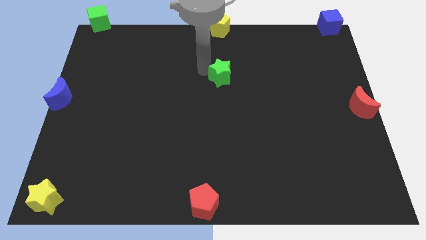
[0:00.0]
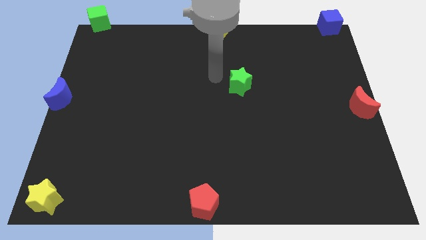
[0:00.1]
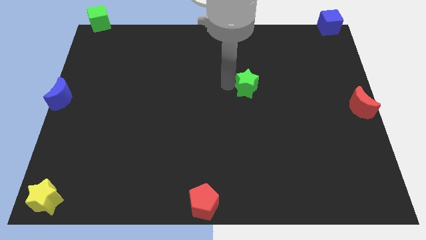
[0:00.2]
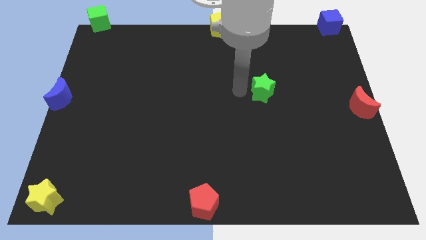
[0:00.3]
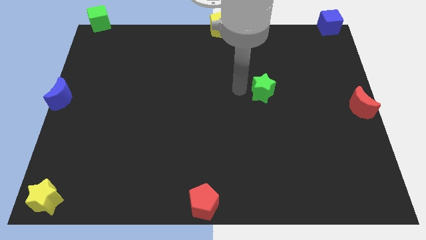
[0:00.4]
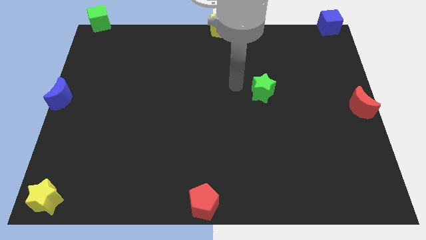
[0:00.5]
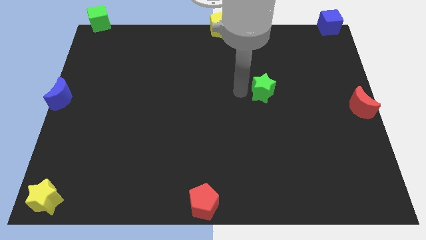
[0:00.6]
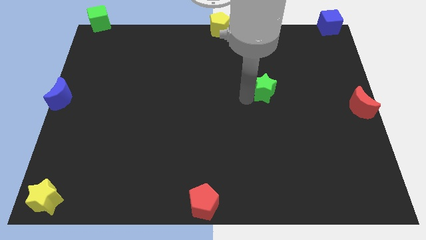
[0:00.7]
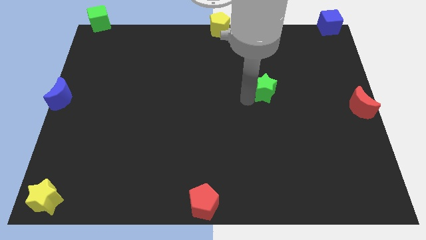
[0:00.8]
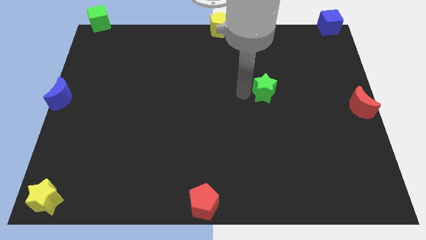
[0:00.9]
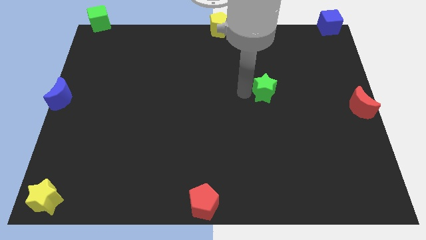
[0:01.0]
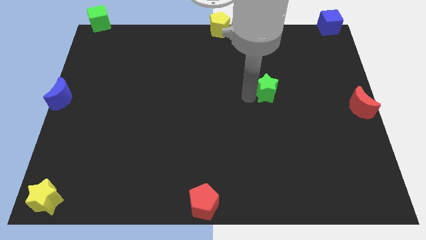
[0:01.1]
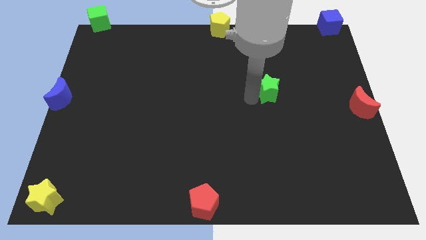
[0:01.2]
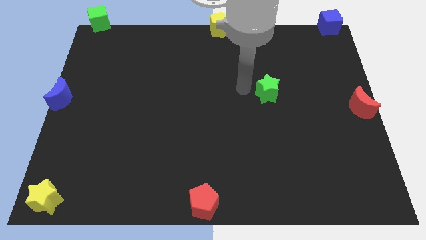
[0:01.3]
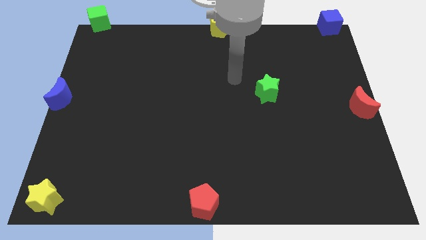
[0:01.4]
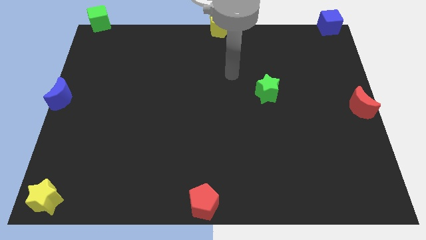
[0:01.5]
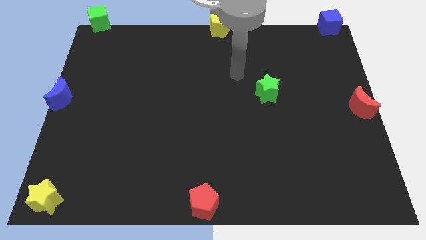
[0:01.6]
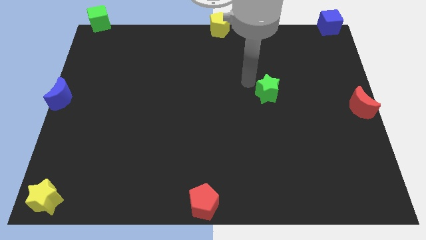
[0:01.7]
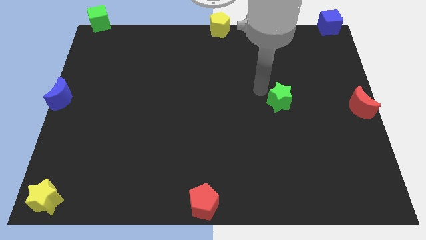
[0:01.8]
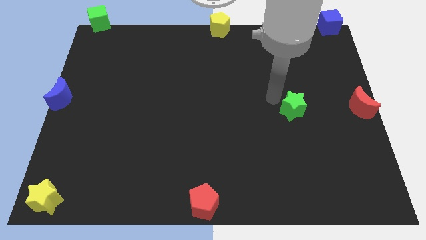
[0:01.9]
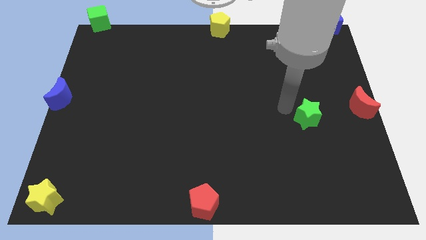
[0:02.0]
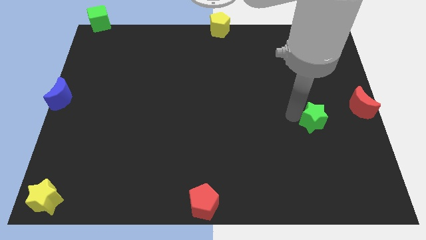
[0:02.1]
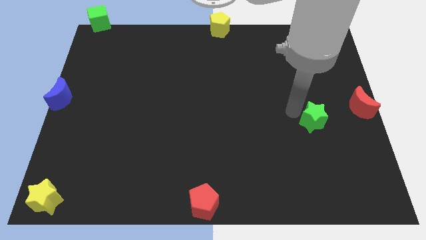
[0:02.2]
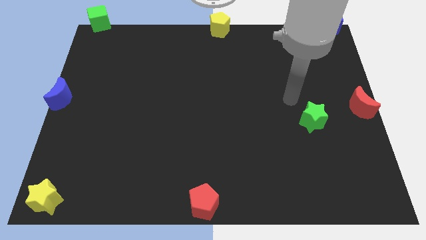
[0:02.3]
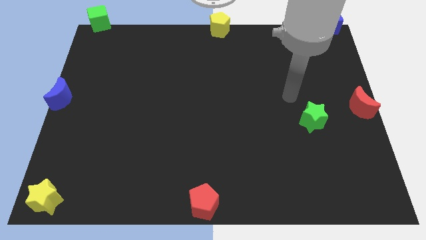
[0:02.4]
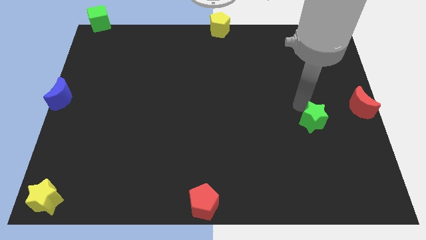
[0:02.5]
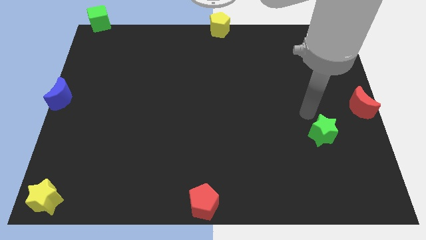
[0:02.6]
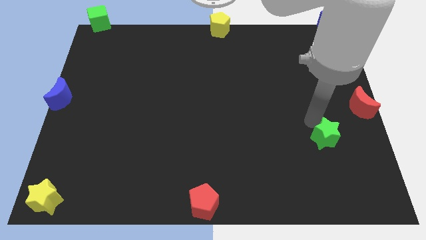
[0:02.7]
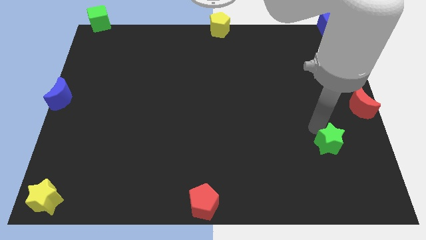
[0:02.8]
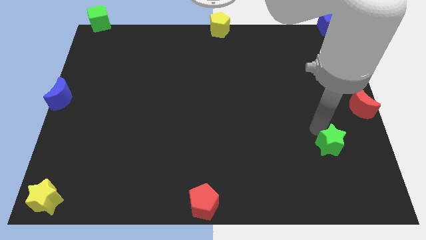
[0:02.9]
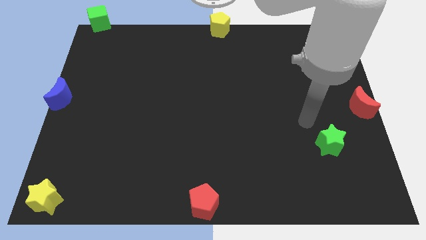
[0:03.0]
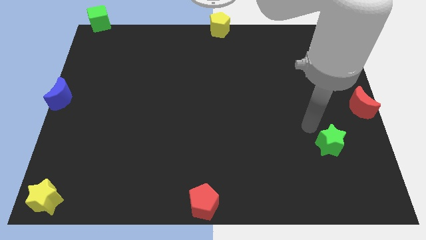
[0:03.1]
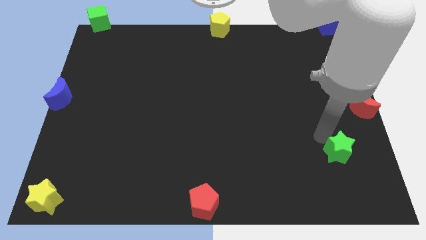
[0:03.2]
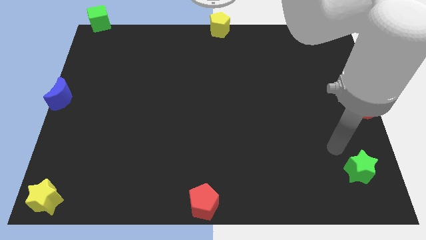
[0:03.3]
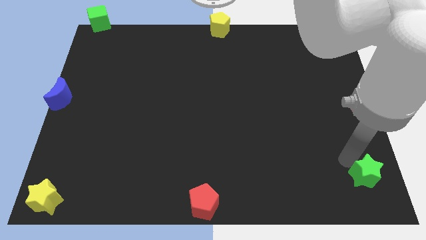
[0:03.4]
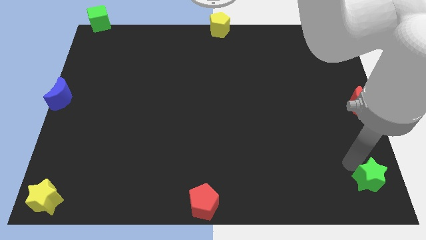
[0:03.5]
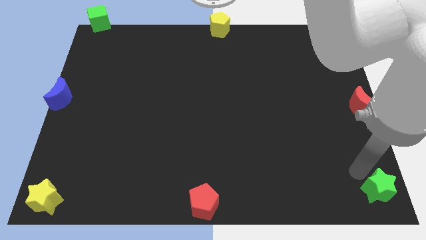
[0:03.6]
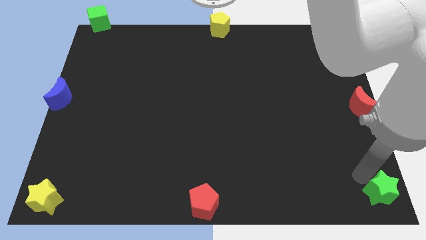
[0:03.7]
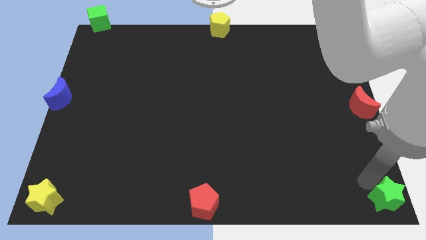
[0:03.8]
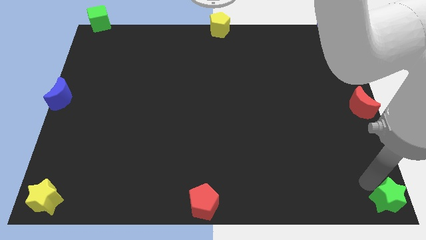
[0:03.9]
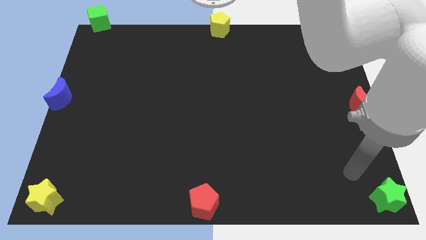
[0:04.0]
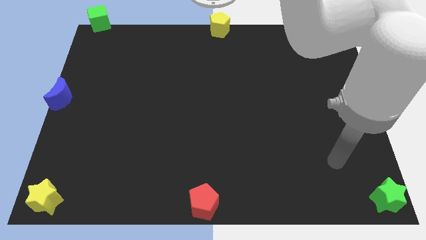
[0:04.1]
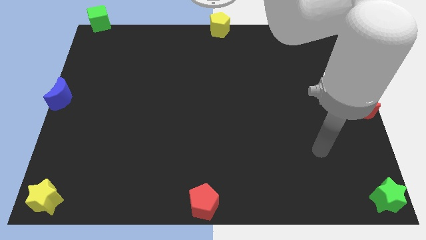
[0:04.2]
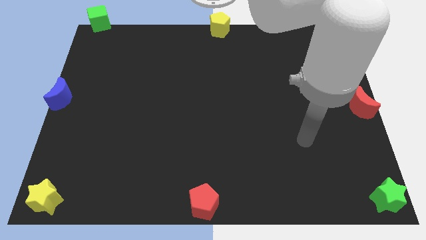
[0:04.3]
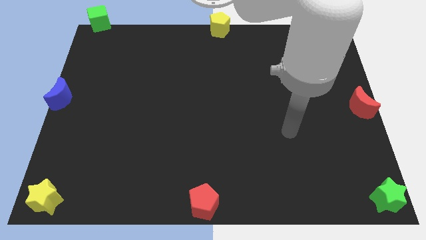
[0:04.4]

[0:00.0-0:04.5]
move the green star towards the bottom right

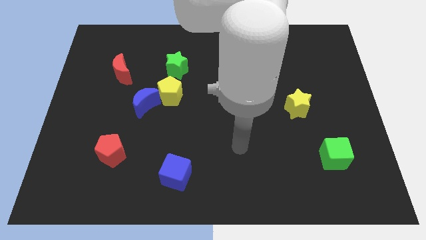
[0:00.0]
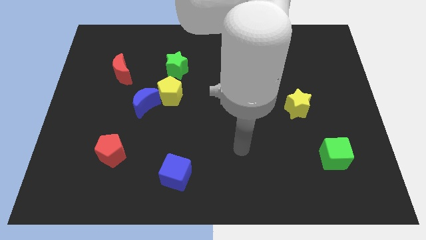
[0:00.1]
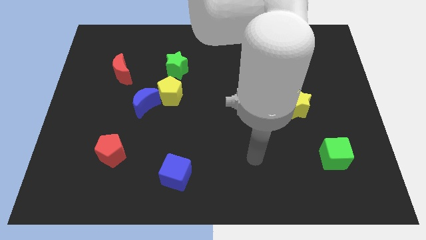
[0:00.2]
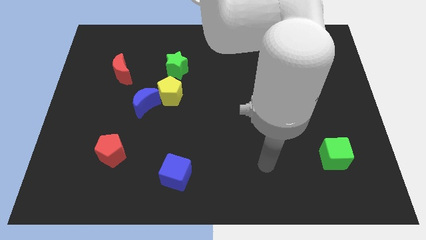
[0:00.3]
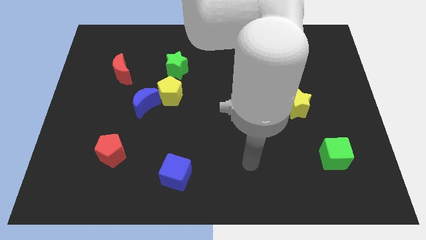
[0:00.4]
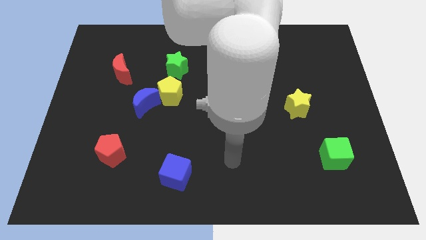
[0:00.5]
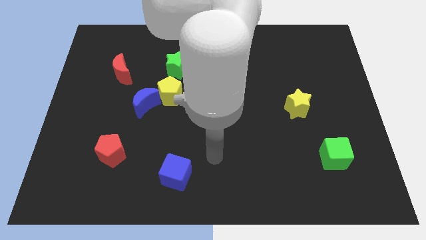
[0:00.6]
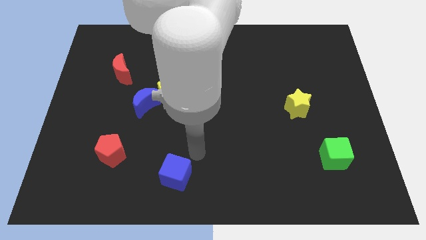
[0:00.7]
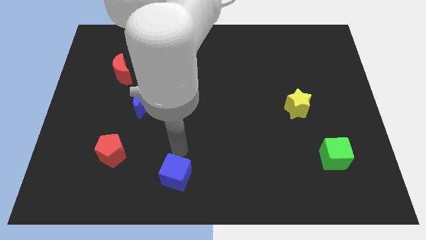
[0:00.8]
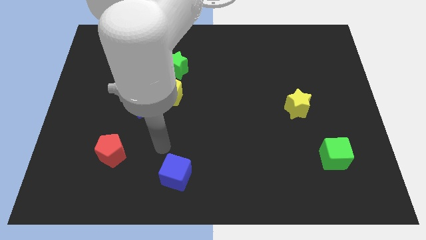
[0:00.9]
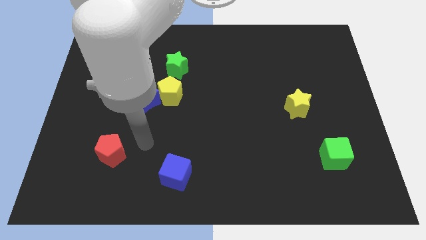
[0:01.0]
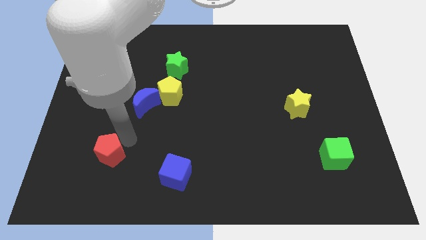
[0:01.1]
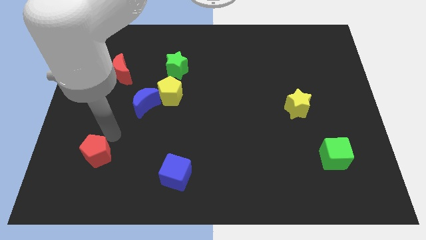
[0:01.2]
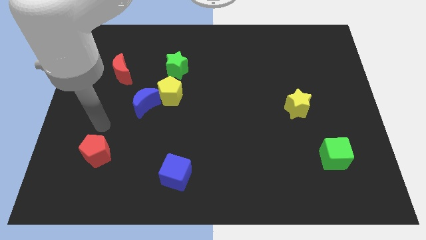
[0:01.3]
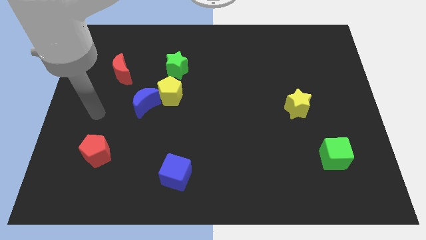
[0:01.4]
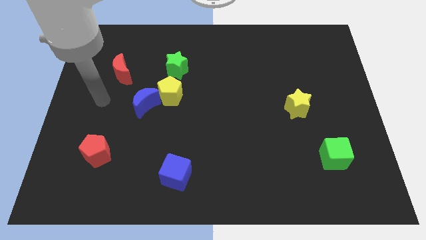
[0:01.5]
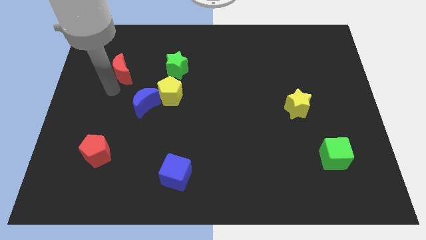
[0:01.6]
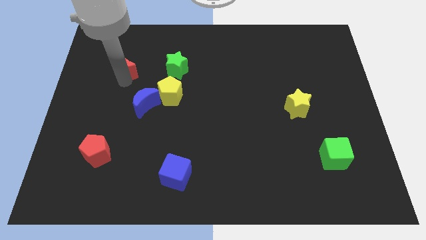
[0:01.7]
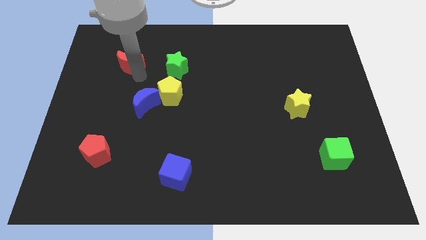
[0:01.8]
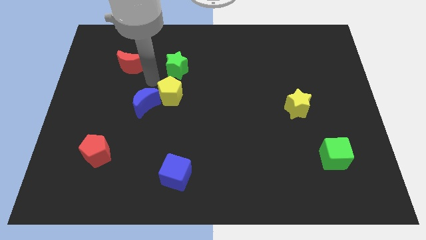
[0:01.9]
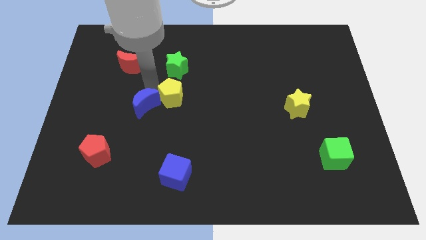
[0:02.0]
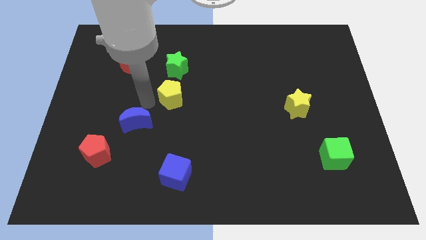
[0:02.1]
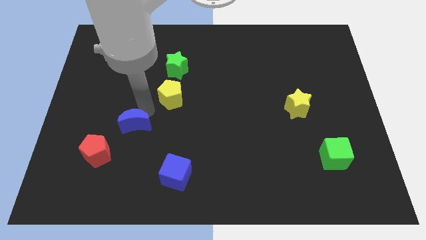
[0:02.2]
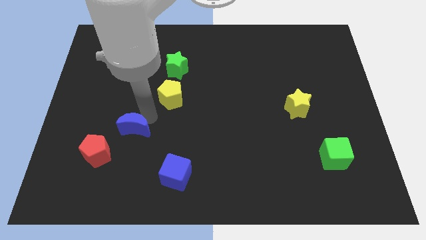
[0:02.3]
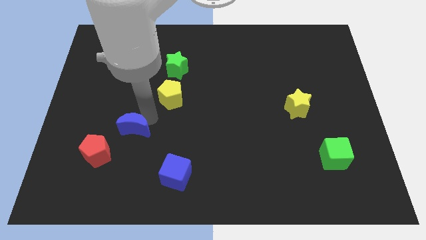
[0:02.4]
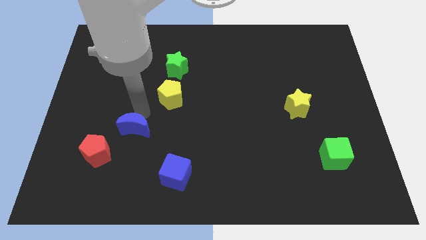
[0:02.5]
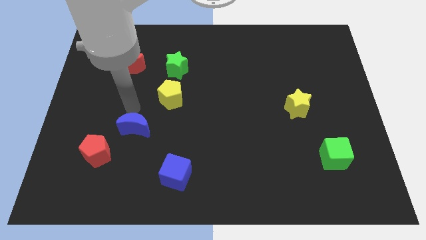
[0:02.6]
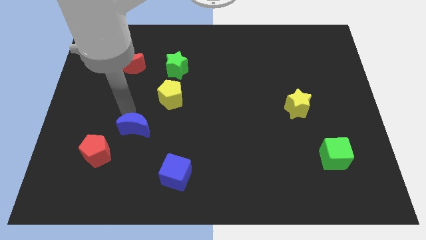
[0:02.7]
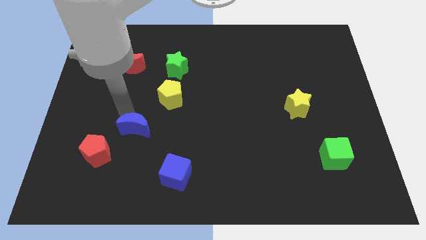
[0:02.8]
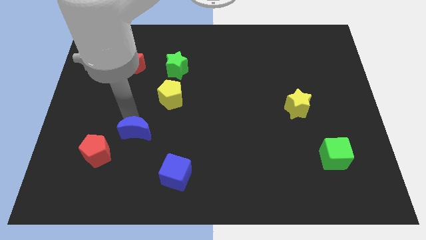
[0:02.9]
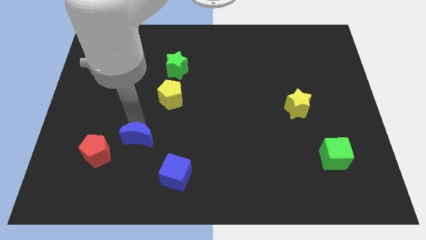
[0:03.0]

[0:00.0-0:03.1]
place blue crescent on the top right of the red pentagon

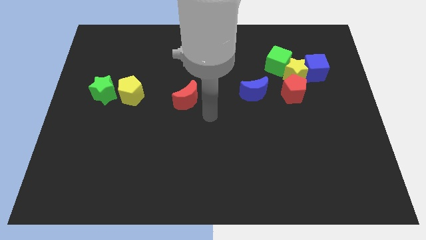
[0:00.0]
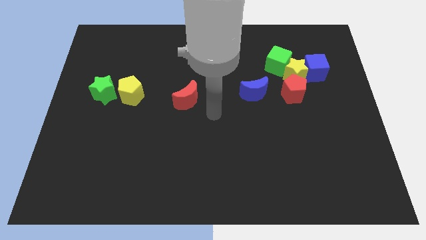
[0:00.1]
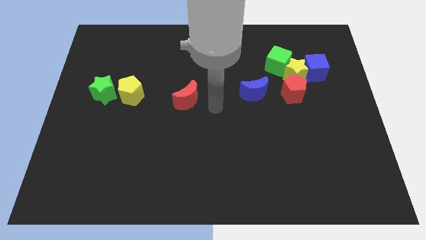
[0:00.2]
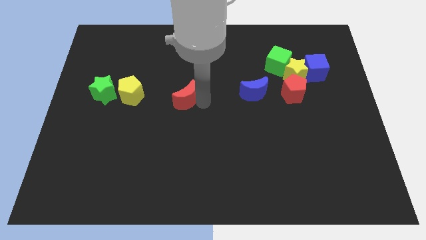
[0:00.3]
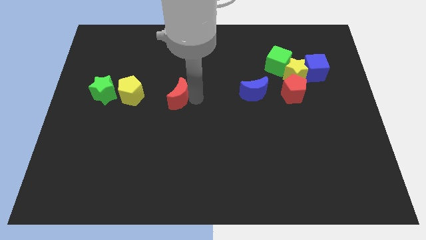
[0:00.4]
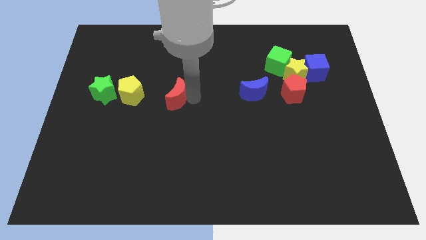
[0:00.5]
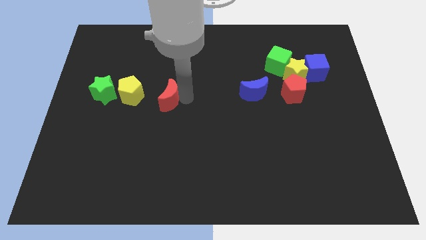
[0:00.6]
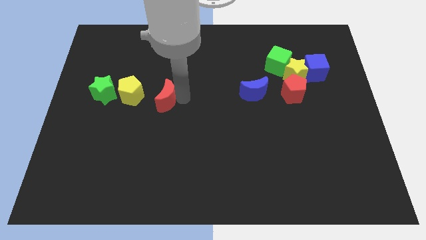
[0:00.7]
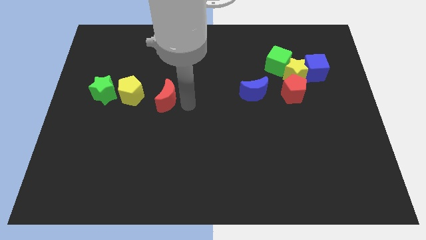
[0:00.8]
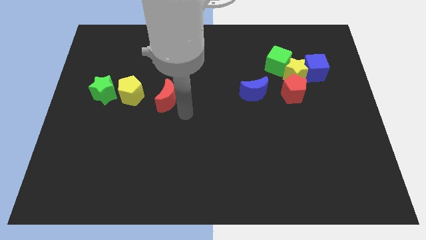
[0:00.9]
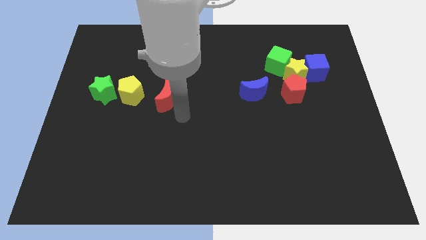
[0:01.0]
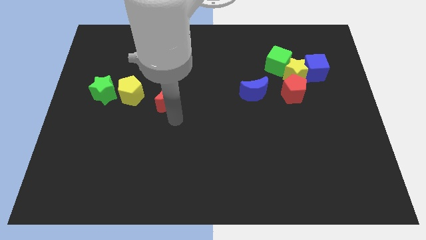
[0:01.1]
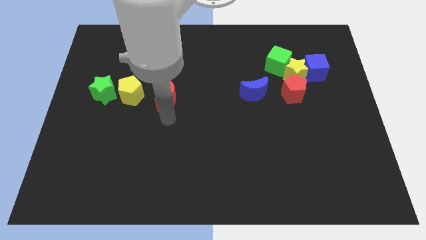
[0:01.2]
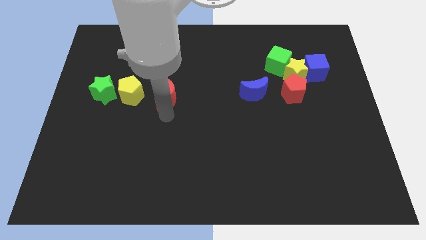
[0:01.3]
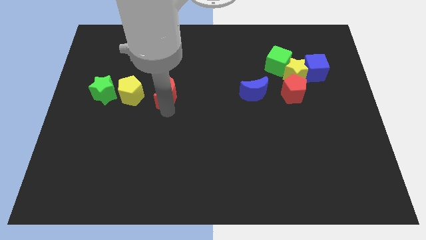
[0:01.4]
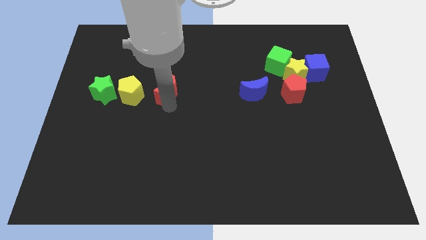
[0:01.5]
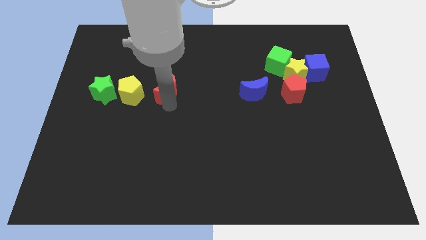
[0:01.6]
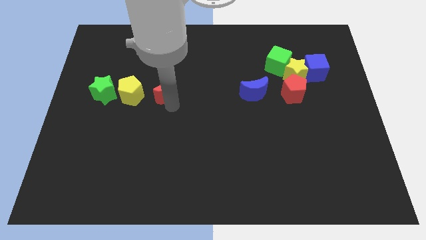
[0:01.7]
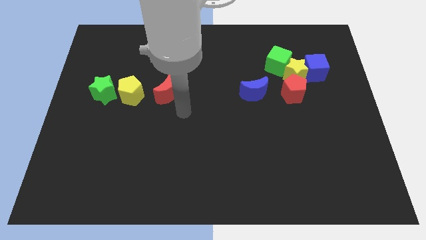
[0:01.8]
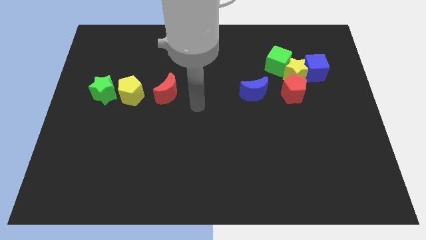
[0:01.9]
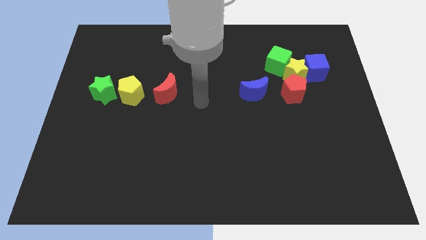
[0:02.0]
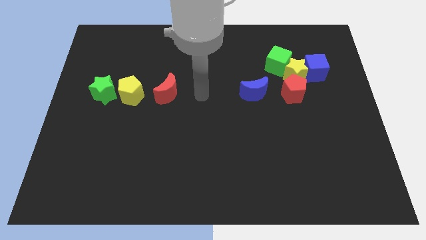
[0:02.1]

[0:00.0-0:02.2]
push the red moon towards the yellow pentagon
